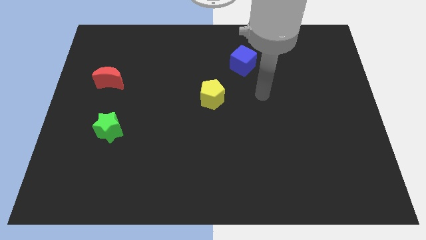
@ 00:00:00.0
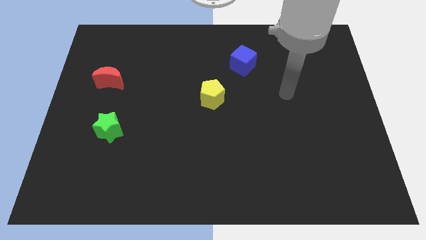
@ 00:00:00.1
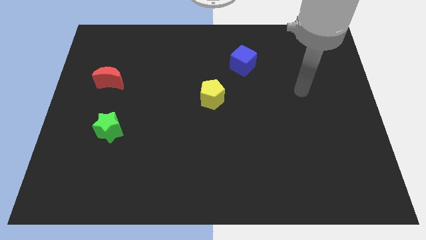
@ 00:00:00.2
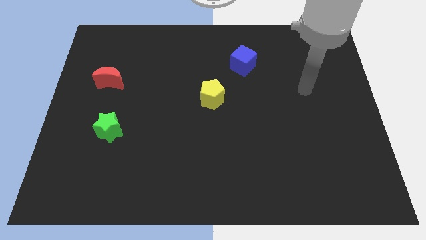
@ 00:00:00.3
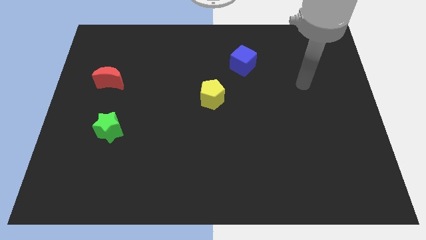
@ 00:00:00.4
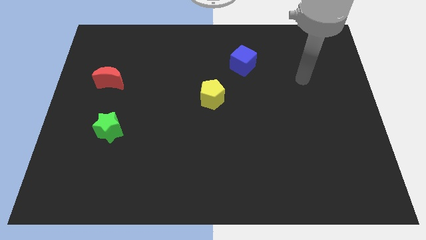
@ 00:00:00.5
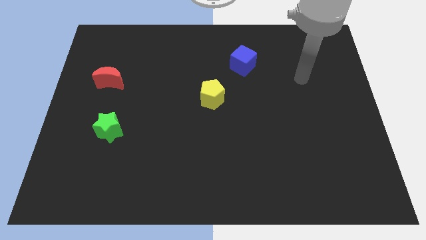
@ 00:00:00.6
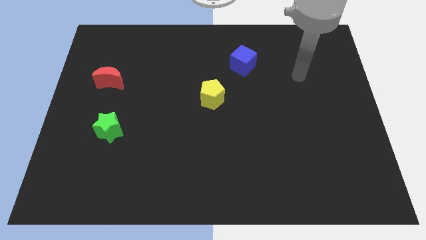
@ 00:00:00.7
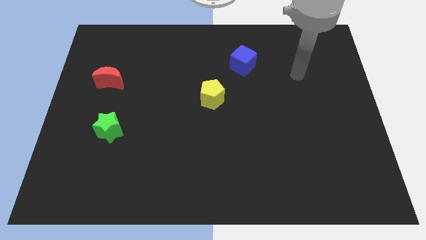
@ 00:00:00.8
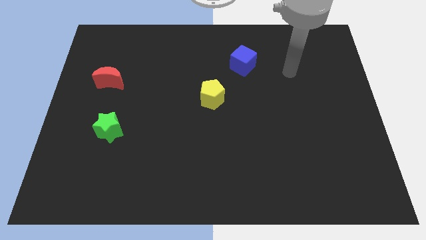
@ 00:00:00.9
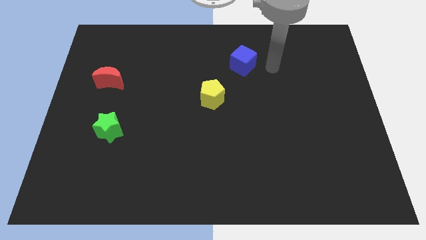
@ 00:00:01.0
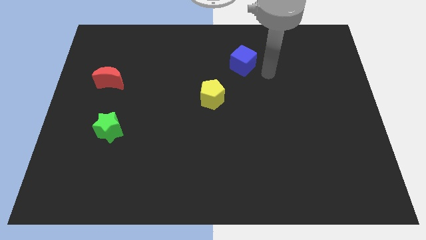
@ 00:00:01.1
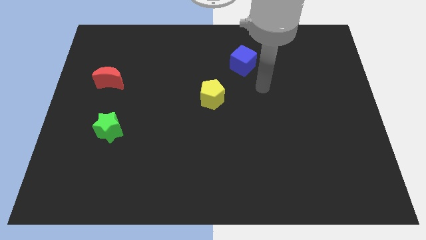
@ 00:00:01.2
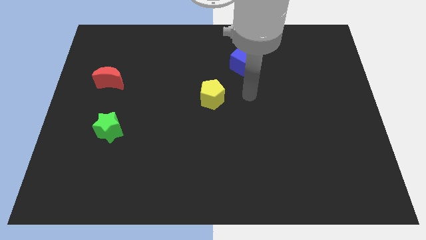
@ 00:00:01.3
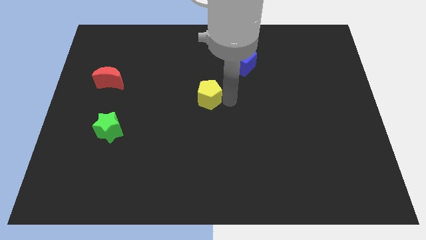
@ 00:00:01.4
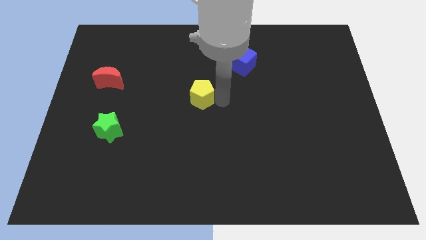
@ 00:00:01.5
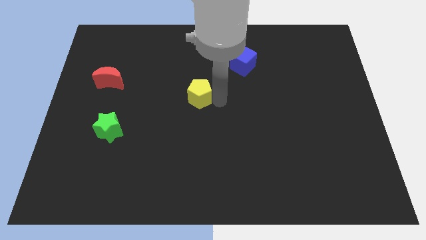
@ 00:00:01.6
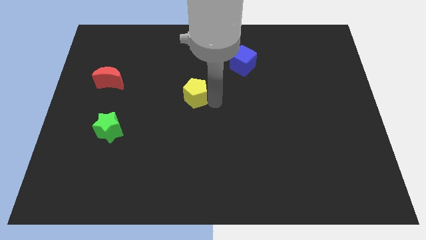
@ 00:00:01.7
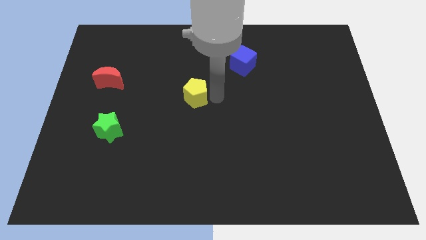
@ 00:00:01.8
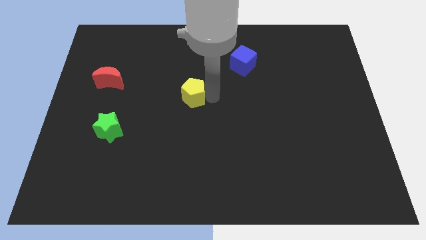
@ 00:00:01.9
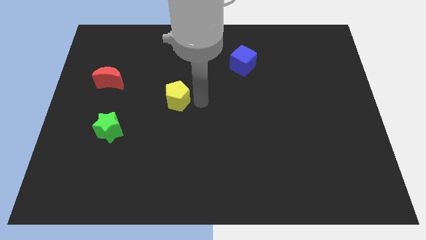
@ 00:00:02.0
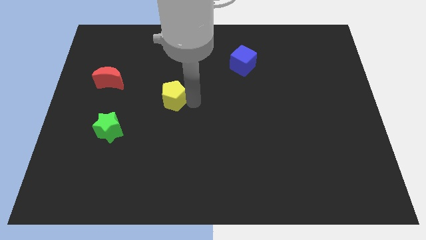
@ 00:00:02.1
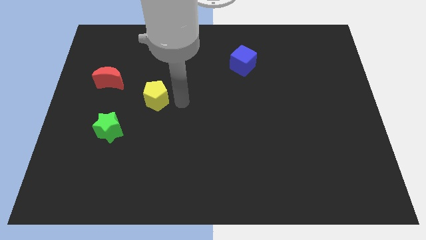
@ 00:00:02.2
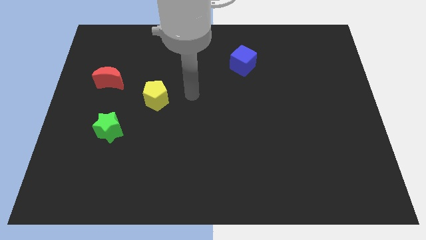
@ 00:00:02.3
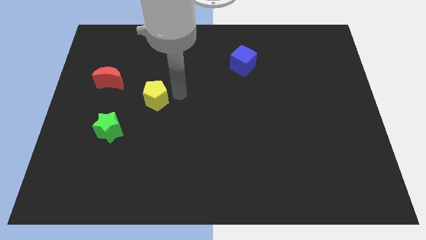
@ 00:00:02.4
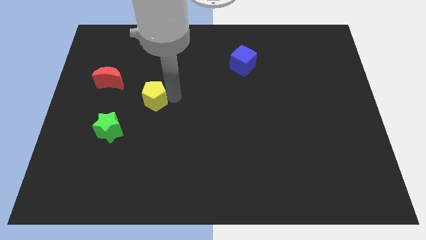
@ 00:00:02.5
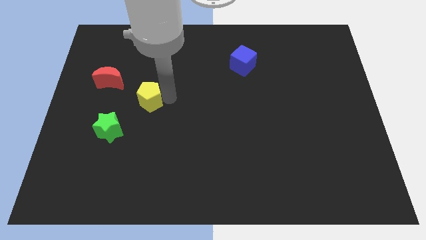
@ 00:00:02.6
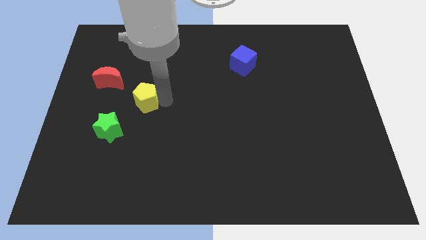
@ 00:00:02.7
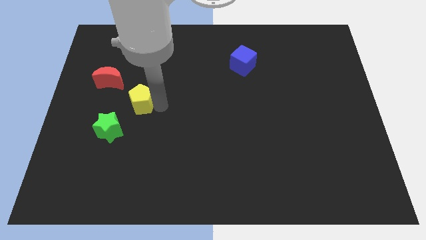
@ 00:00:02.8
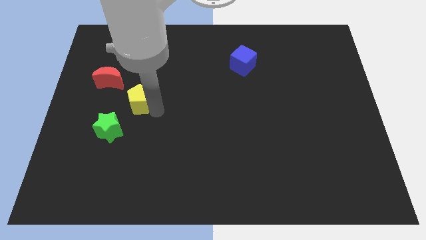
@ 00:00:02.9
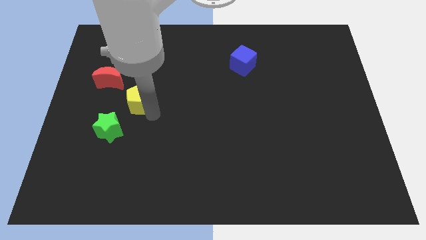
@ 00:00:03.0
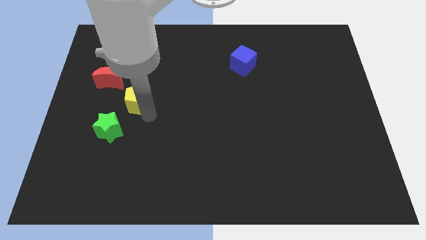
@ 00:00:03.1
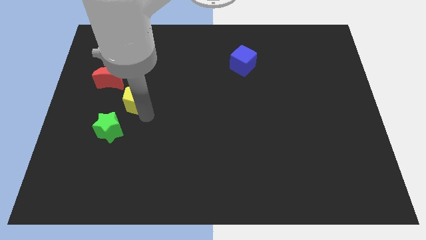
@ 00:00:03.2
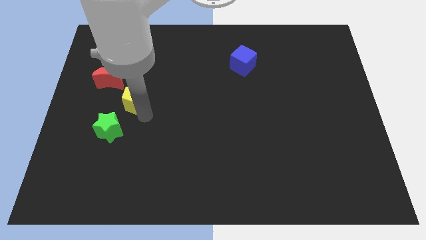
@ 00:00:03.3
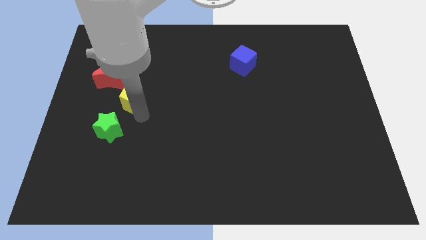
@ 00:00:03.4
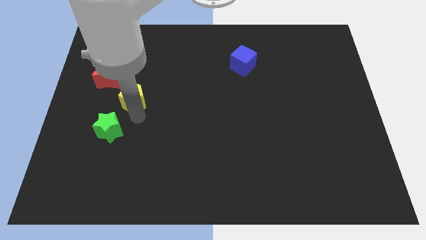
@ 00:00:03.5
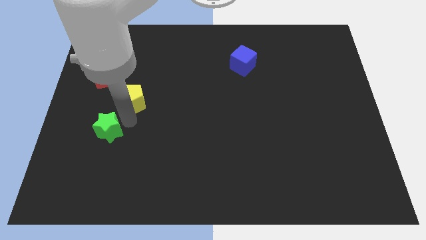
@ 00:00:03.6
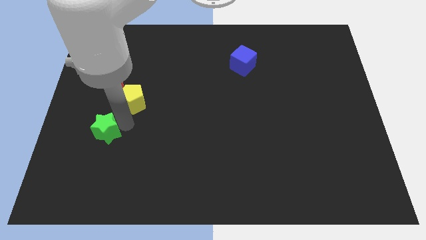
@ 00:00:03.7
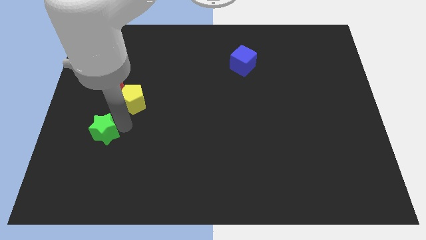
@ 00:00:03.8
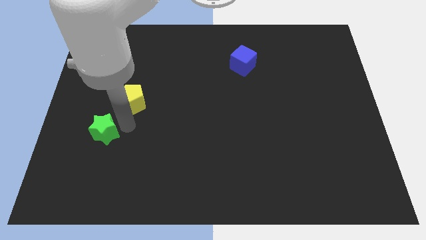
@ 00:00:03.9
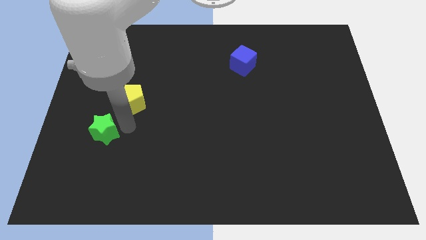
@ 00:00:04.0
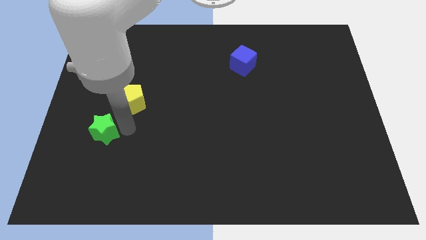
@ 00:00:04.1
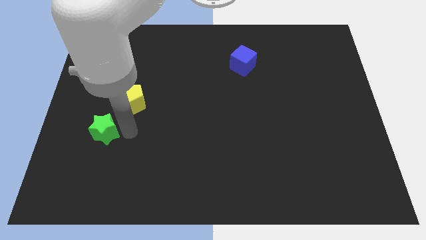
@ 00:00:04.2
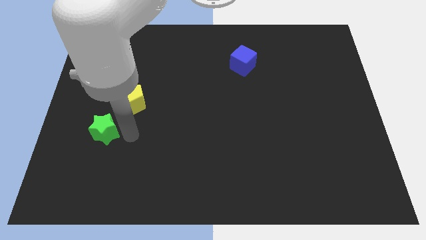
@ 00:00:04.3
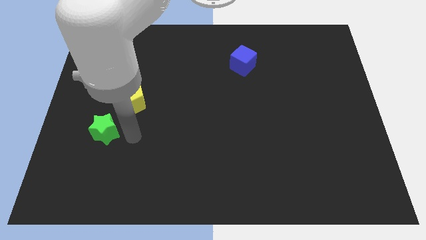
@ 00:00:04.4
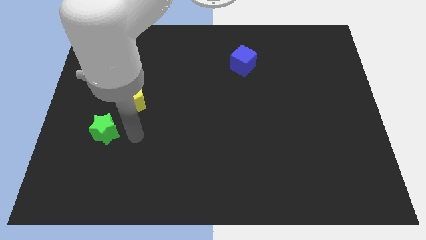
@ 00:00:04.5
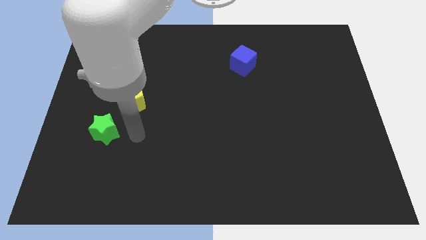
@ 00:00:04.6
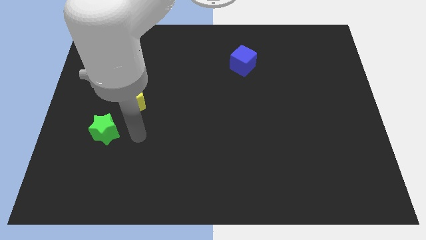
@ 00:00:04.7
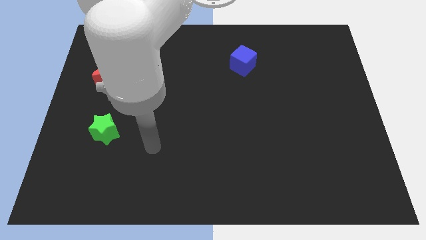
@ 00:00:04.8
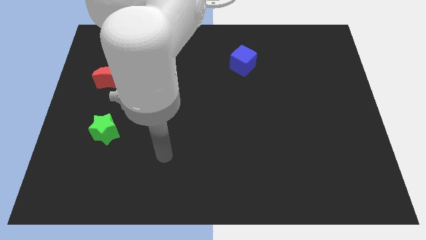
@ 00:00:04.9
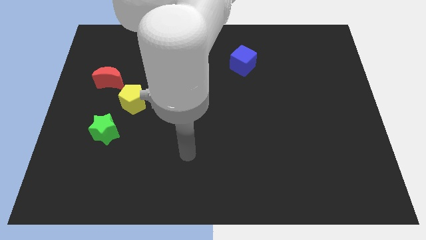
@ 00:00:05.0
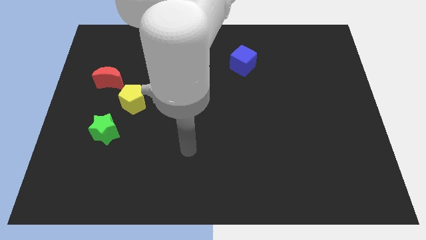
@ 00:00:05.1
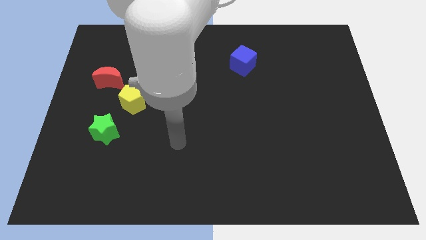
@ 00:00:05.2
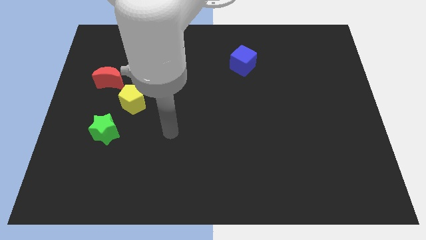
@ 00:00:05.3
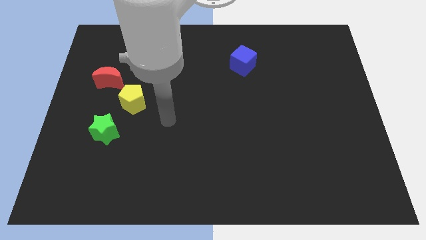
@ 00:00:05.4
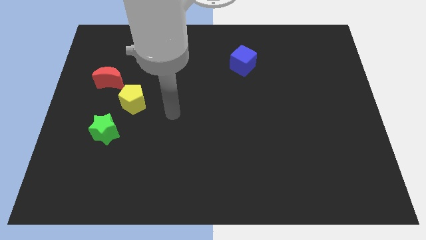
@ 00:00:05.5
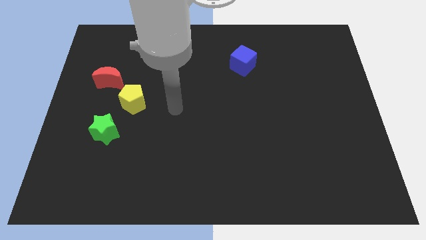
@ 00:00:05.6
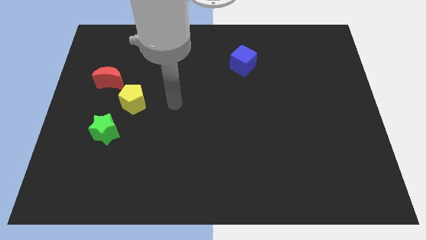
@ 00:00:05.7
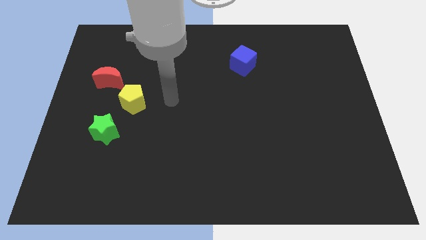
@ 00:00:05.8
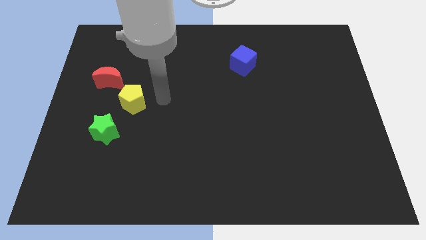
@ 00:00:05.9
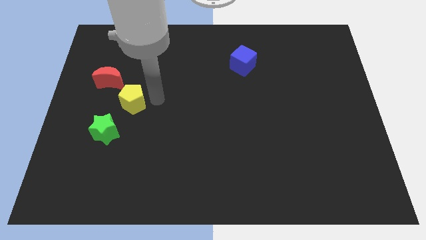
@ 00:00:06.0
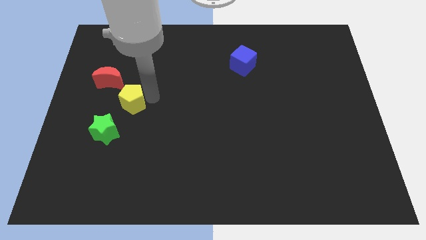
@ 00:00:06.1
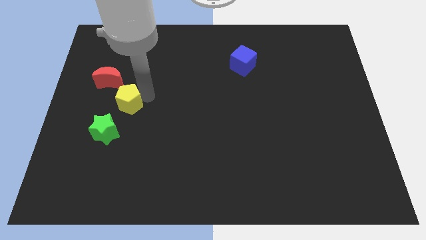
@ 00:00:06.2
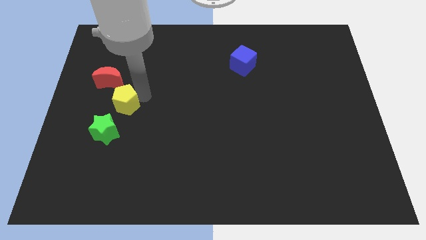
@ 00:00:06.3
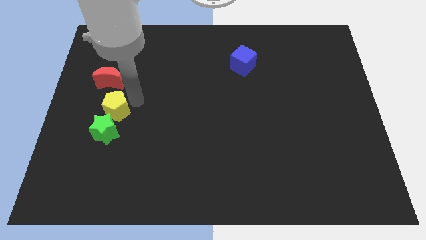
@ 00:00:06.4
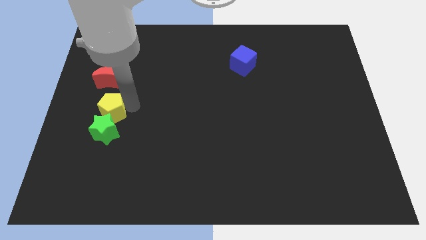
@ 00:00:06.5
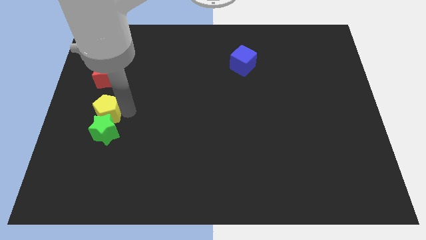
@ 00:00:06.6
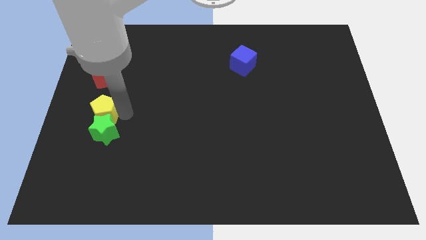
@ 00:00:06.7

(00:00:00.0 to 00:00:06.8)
slide the yellow block close to the green block

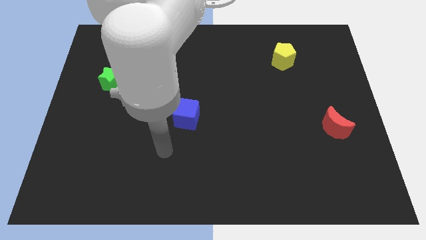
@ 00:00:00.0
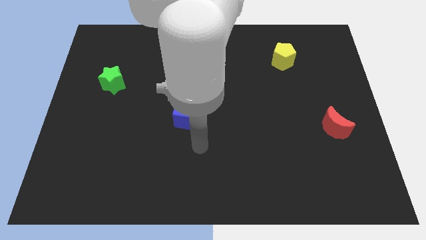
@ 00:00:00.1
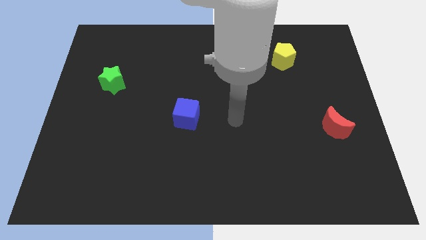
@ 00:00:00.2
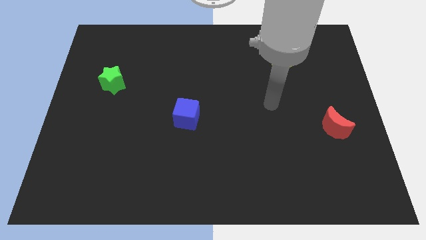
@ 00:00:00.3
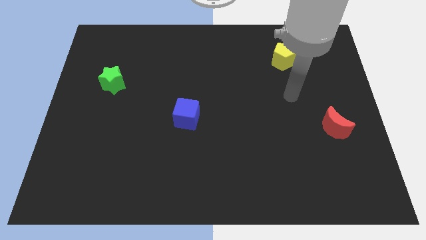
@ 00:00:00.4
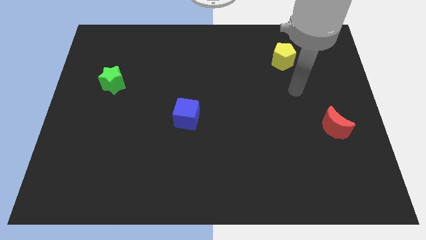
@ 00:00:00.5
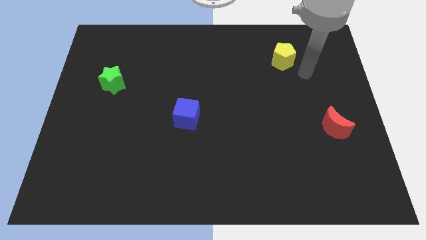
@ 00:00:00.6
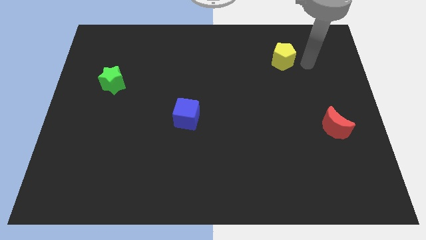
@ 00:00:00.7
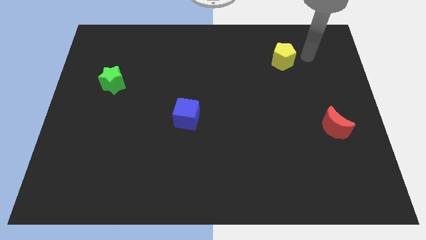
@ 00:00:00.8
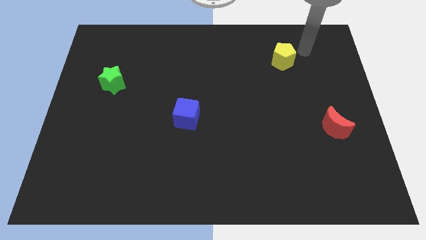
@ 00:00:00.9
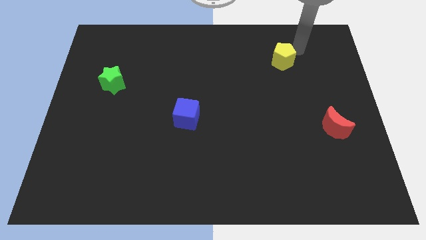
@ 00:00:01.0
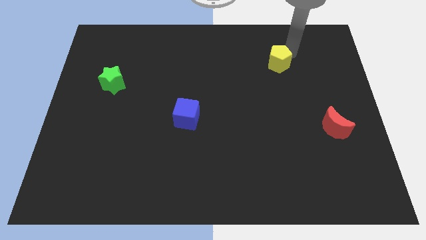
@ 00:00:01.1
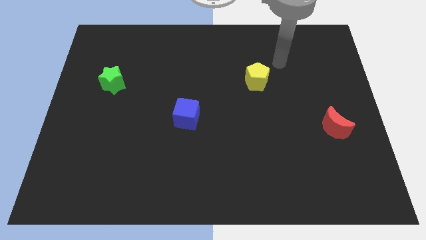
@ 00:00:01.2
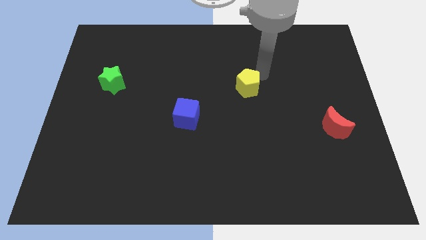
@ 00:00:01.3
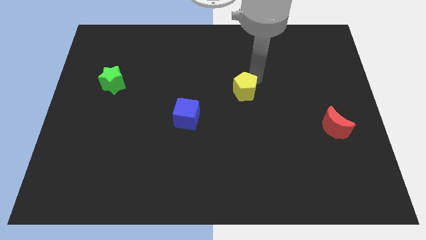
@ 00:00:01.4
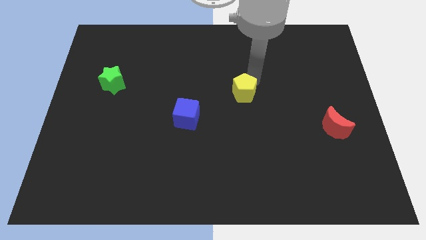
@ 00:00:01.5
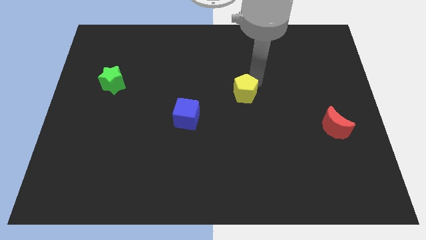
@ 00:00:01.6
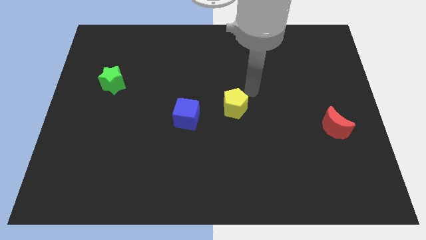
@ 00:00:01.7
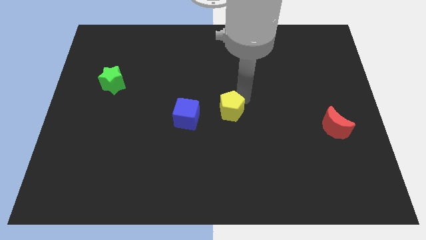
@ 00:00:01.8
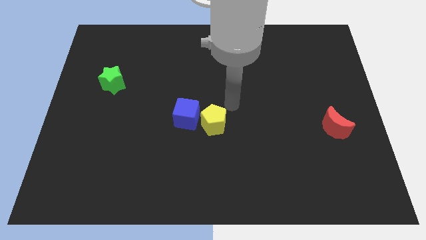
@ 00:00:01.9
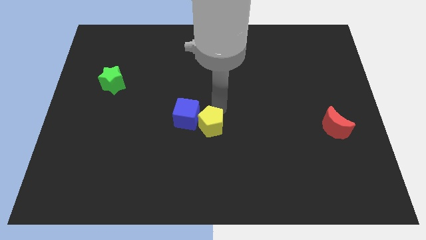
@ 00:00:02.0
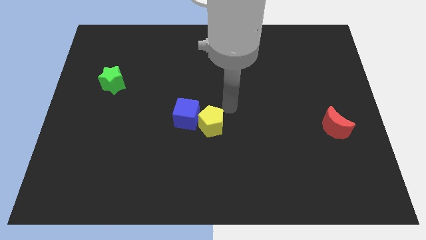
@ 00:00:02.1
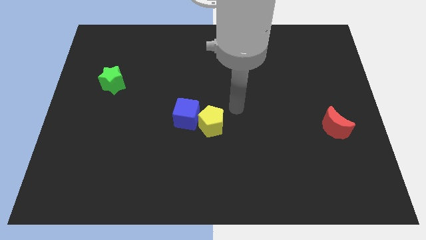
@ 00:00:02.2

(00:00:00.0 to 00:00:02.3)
push the yellow block close to the blue cube
